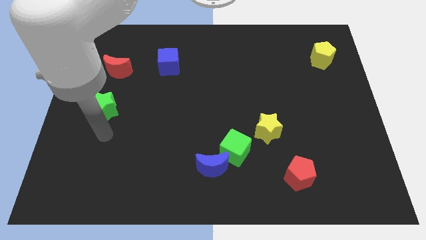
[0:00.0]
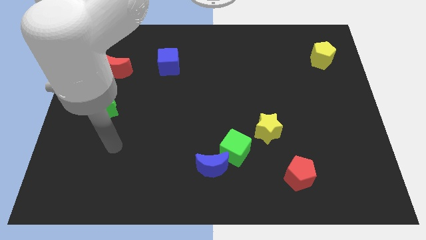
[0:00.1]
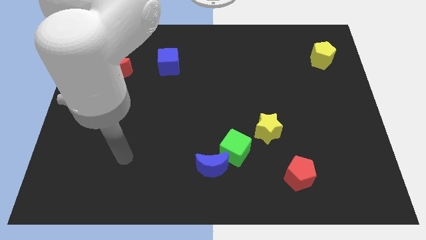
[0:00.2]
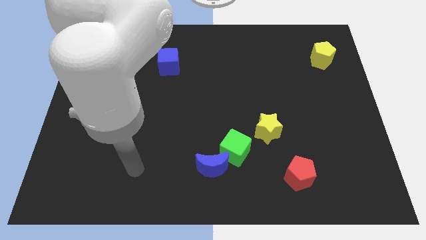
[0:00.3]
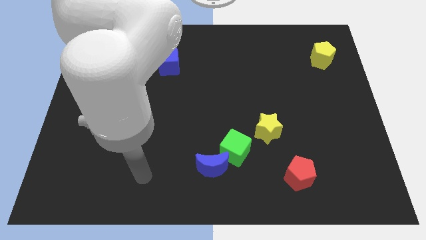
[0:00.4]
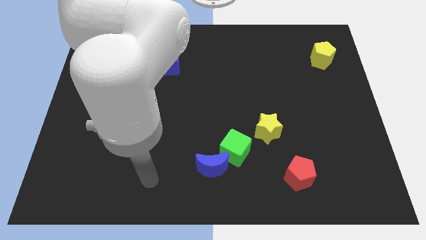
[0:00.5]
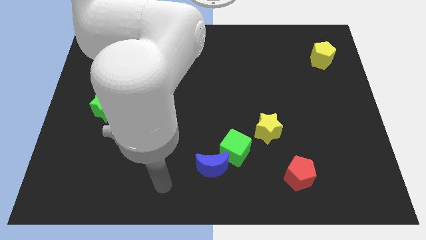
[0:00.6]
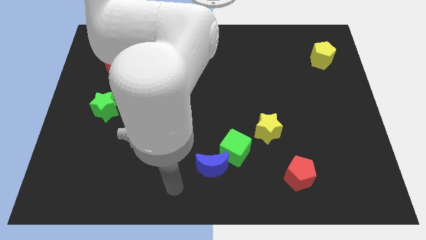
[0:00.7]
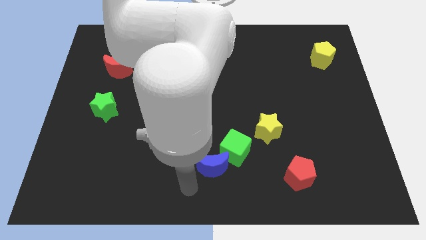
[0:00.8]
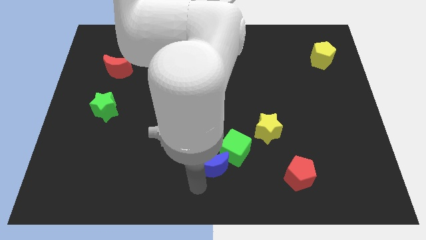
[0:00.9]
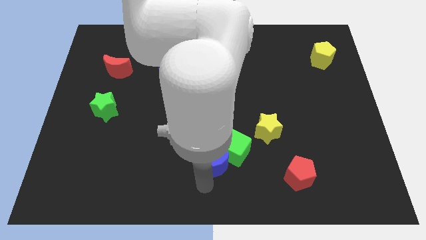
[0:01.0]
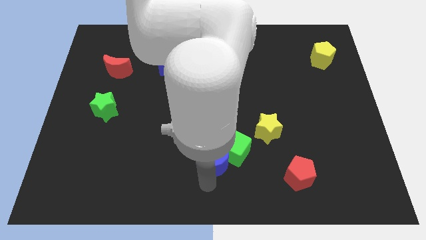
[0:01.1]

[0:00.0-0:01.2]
point the arm close to the blue crescent

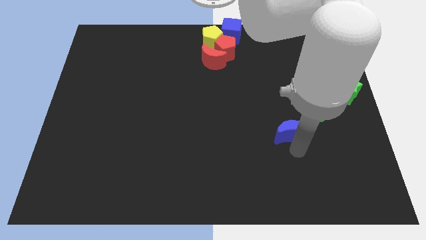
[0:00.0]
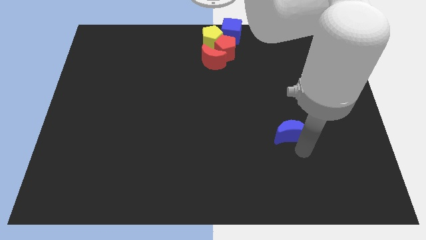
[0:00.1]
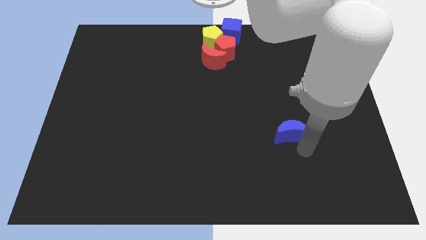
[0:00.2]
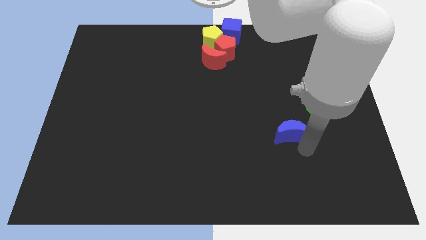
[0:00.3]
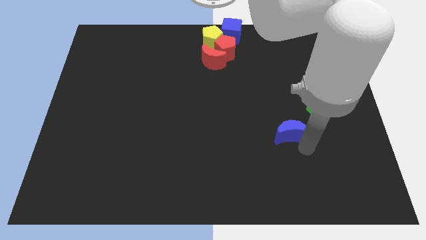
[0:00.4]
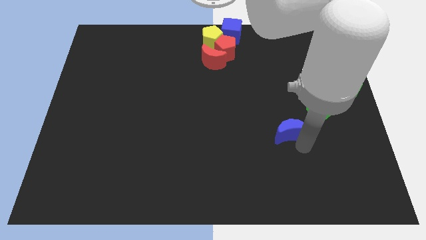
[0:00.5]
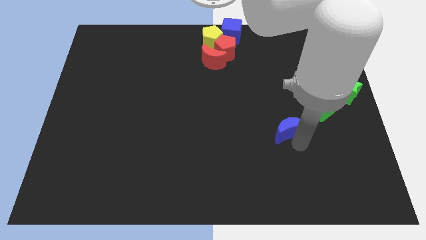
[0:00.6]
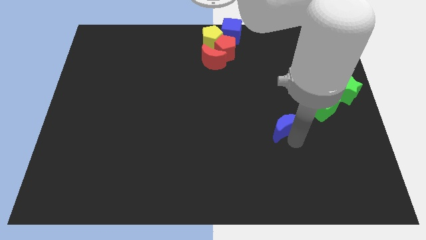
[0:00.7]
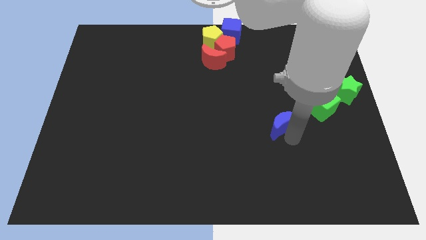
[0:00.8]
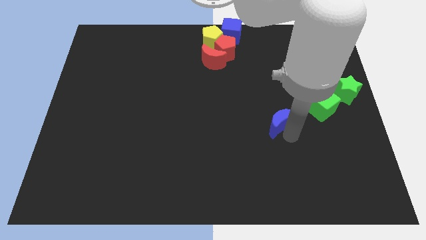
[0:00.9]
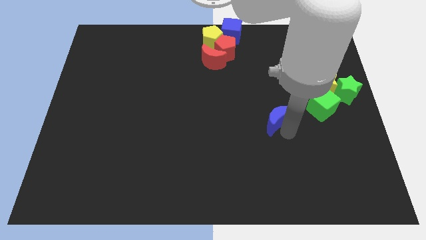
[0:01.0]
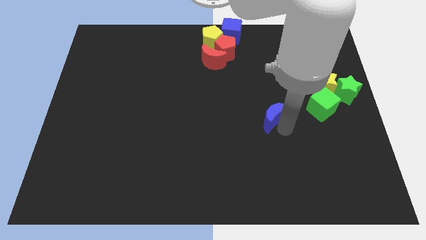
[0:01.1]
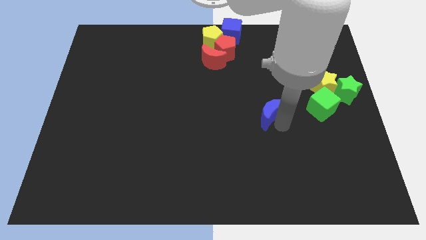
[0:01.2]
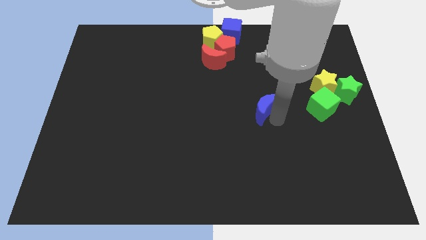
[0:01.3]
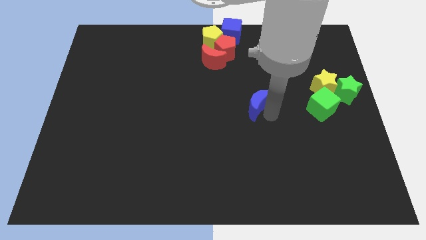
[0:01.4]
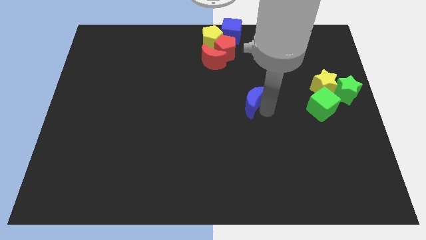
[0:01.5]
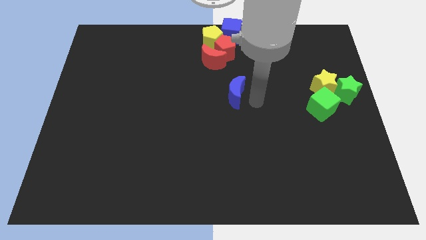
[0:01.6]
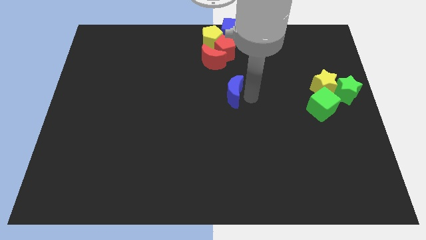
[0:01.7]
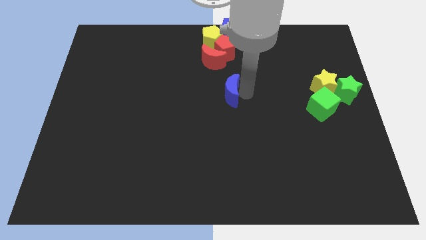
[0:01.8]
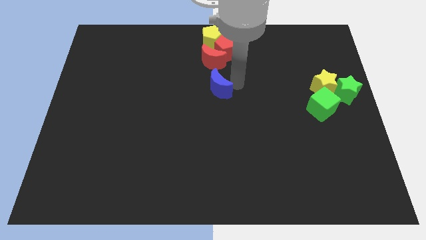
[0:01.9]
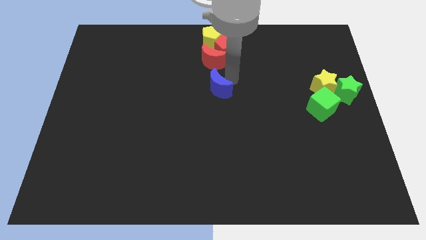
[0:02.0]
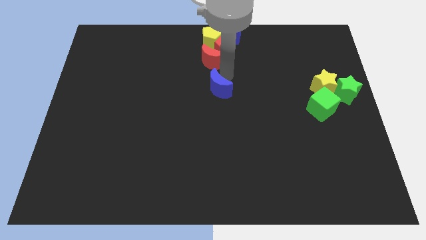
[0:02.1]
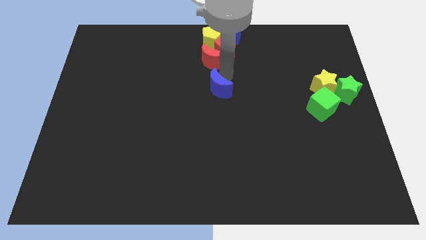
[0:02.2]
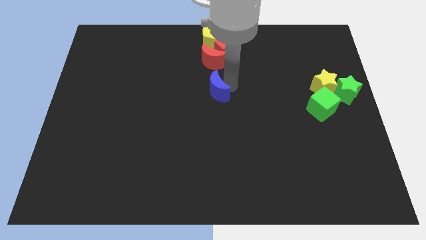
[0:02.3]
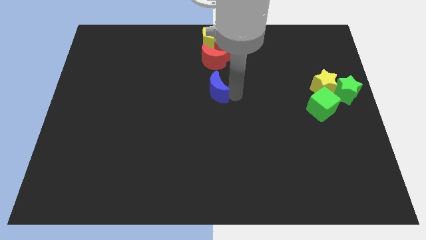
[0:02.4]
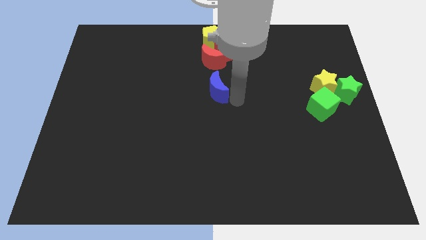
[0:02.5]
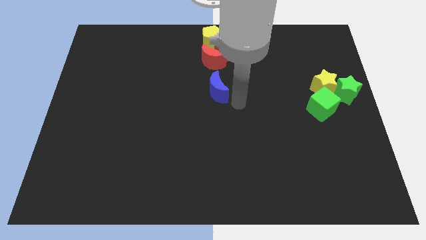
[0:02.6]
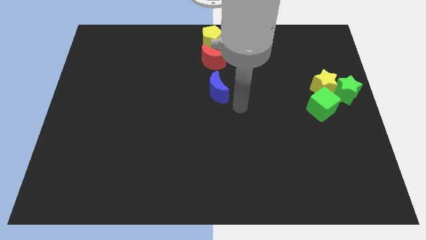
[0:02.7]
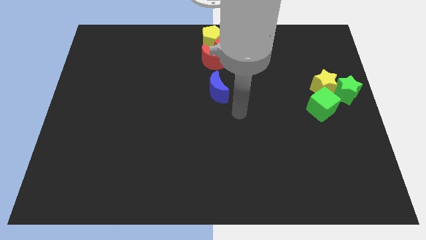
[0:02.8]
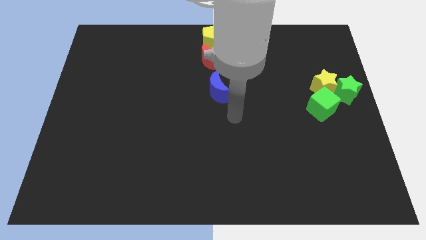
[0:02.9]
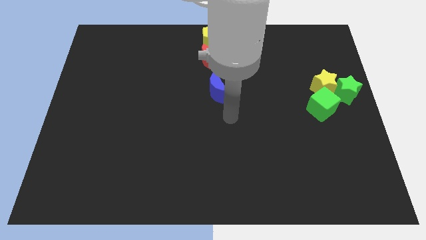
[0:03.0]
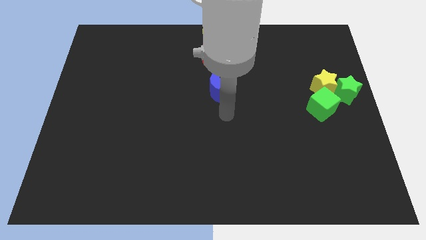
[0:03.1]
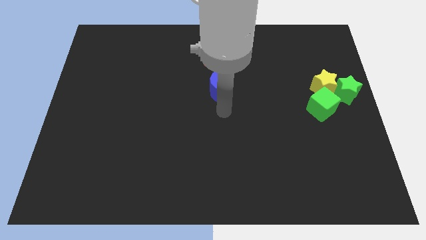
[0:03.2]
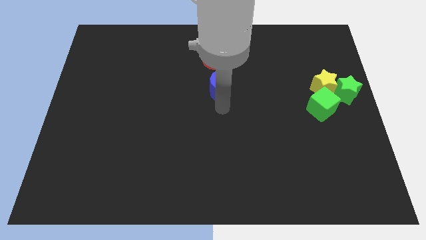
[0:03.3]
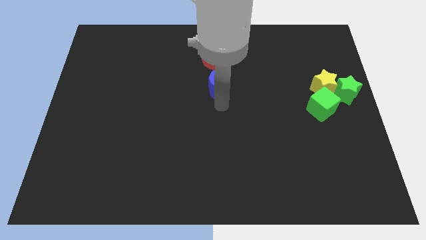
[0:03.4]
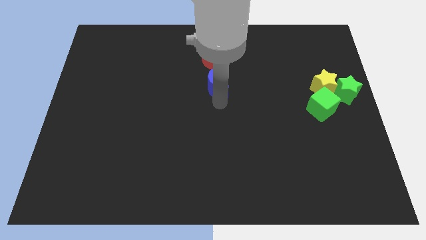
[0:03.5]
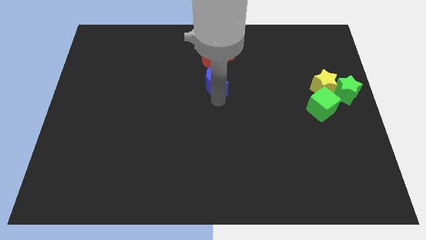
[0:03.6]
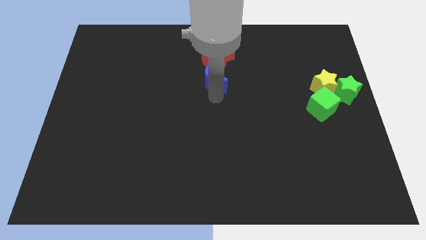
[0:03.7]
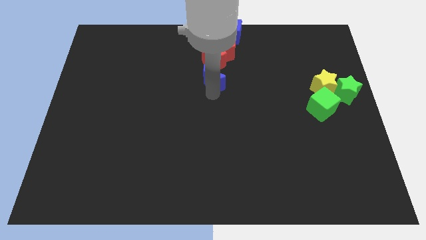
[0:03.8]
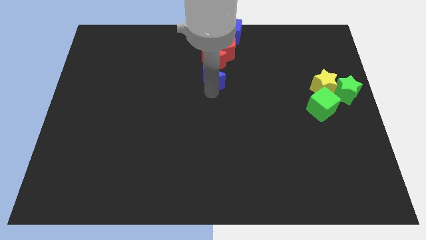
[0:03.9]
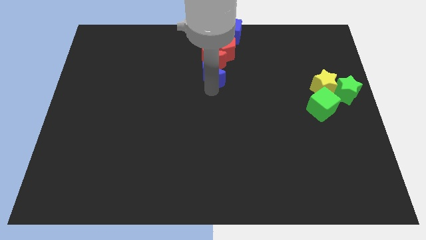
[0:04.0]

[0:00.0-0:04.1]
put the blue crescent underneath the red crescent

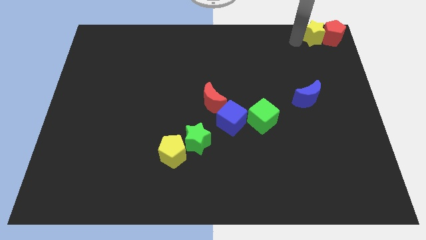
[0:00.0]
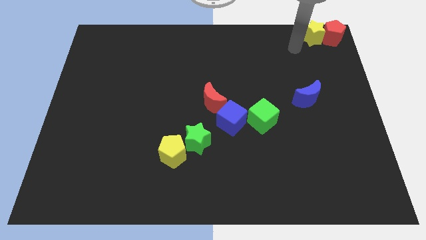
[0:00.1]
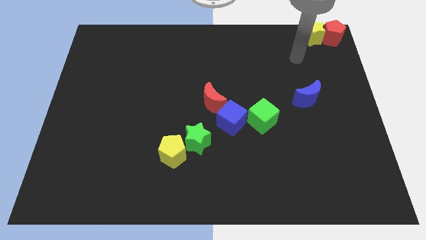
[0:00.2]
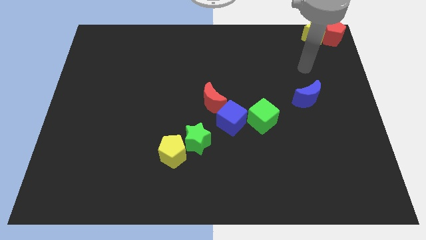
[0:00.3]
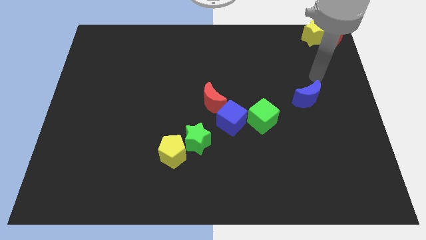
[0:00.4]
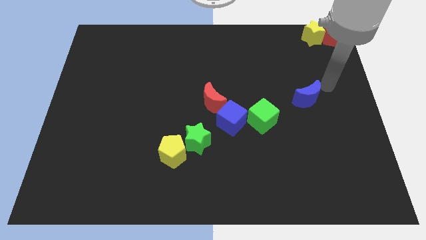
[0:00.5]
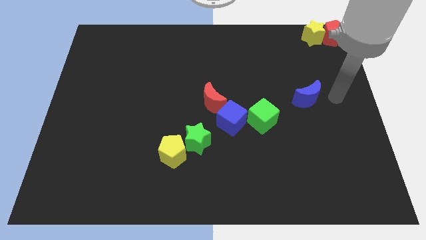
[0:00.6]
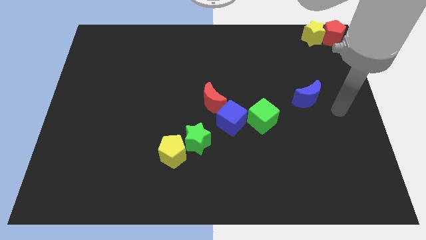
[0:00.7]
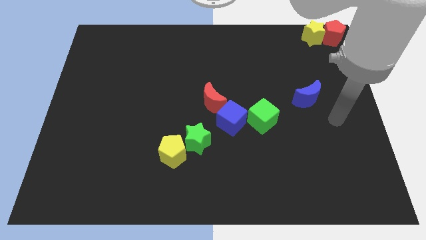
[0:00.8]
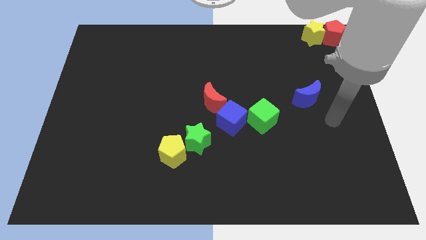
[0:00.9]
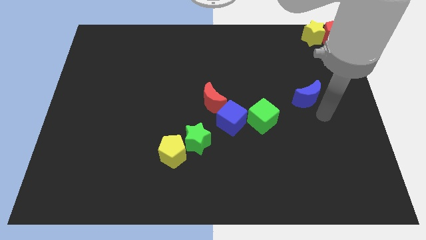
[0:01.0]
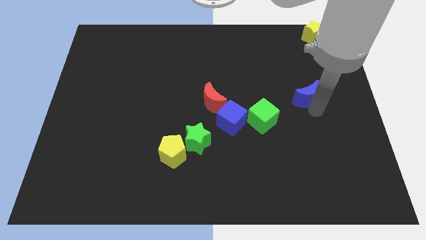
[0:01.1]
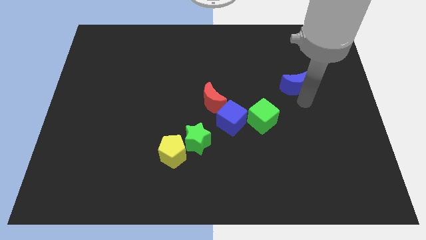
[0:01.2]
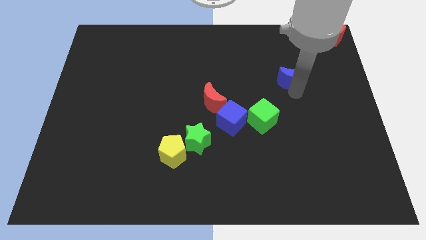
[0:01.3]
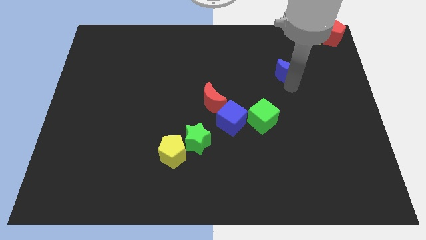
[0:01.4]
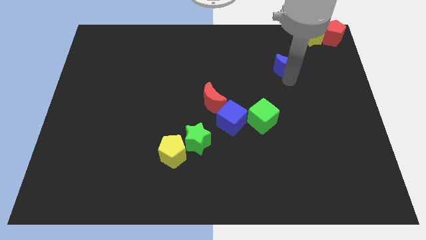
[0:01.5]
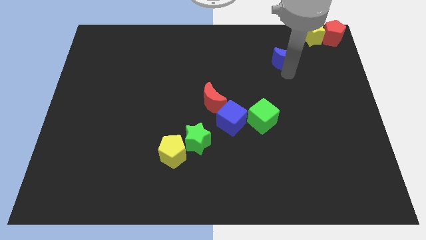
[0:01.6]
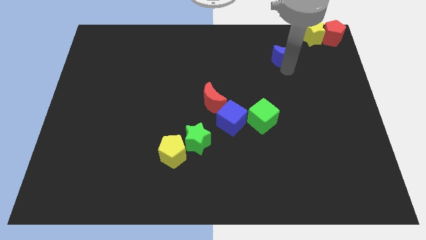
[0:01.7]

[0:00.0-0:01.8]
drag the blue moon towards up

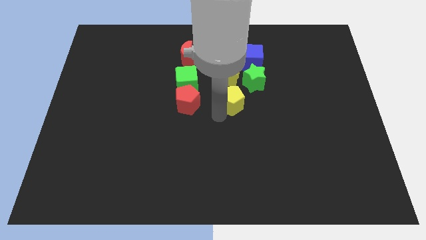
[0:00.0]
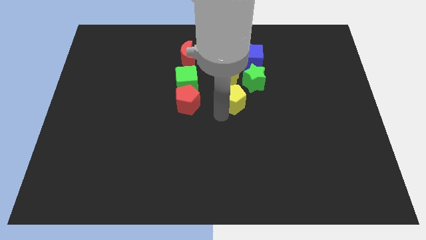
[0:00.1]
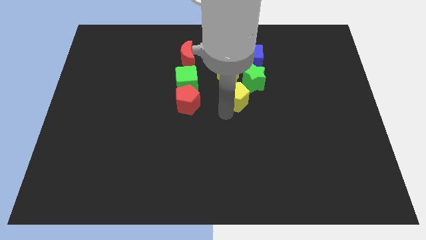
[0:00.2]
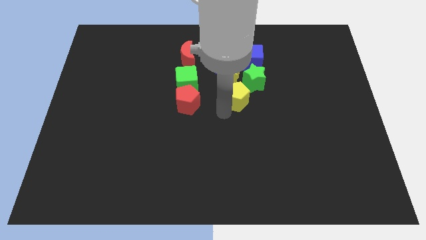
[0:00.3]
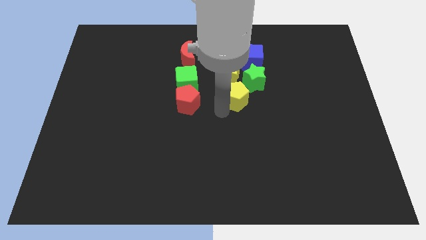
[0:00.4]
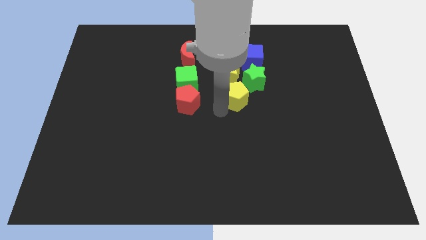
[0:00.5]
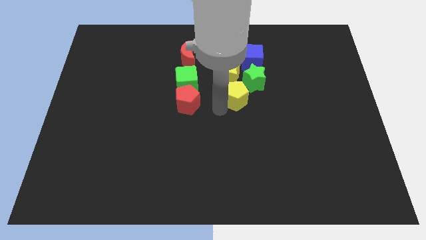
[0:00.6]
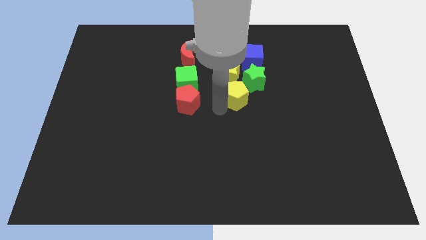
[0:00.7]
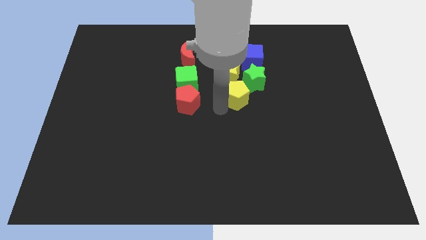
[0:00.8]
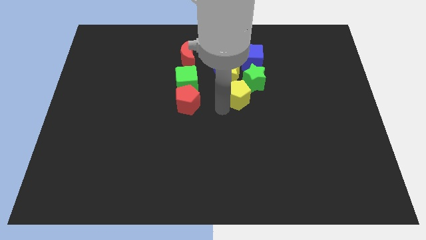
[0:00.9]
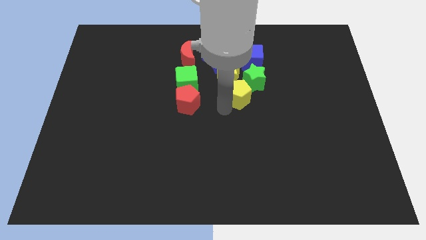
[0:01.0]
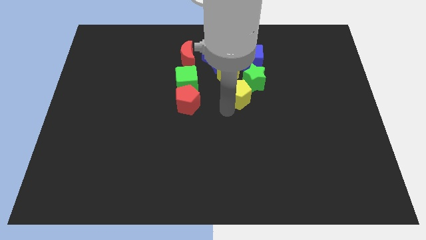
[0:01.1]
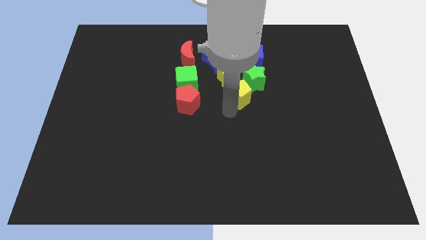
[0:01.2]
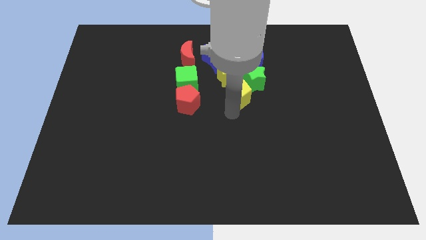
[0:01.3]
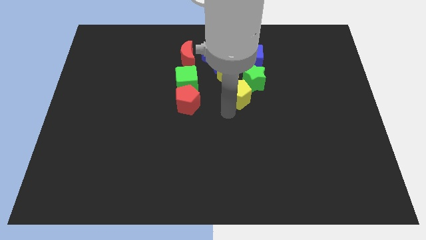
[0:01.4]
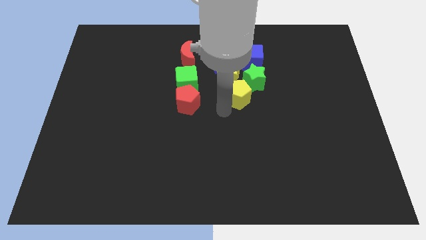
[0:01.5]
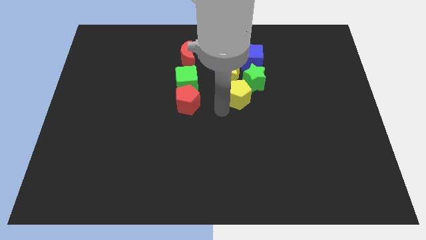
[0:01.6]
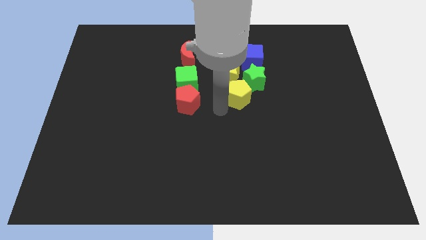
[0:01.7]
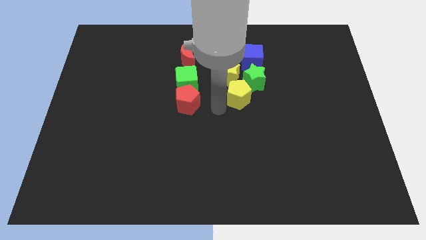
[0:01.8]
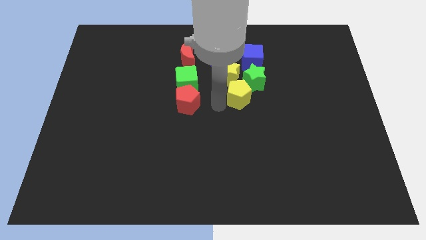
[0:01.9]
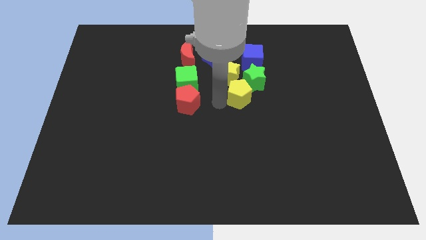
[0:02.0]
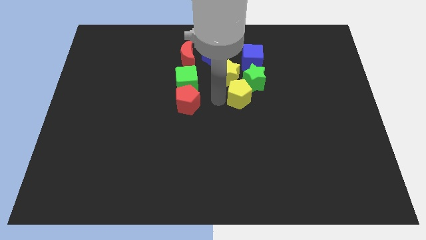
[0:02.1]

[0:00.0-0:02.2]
push the yellow pentagon near to the green star
